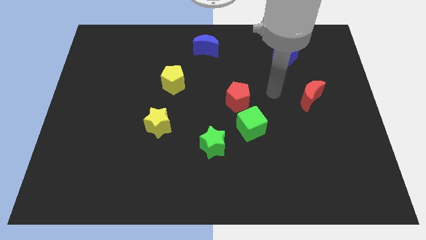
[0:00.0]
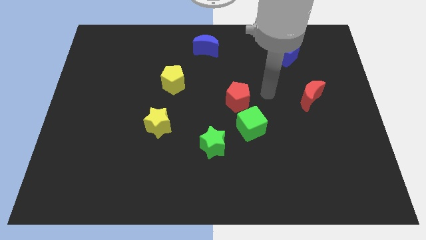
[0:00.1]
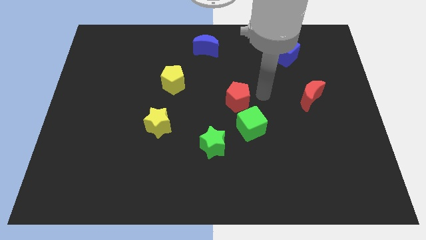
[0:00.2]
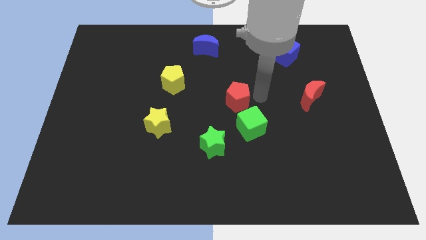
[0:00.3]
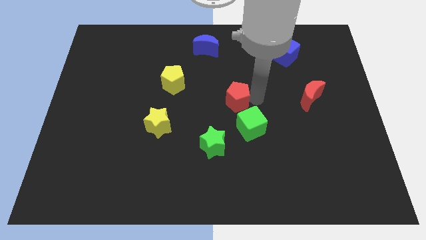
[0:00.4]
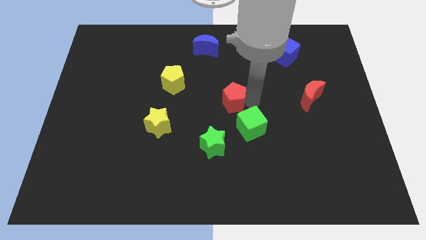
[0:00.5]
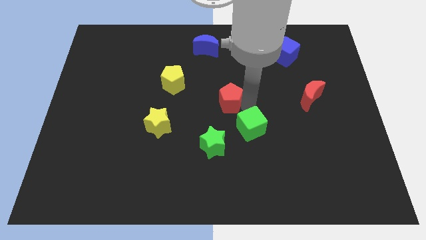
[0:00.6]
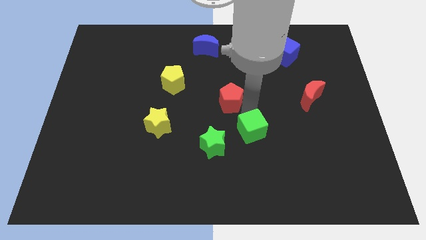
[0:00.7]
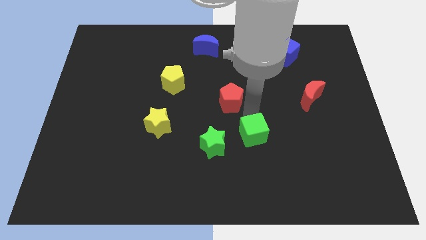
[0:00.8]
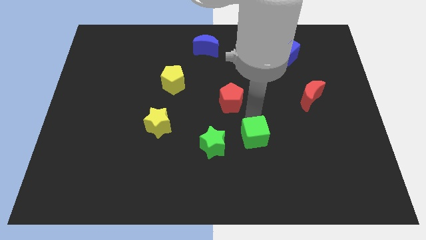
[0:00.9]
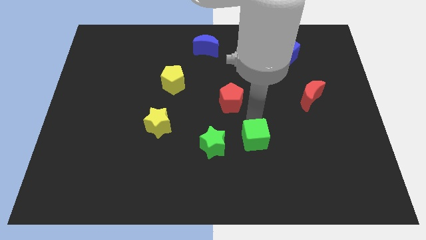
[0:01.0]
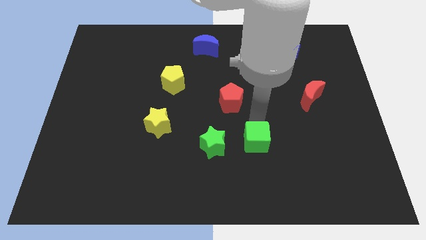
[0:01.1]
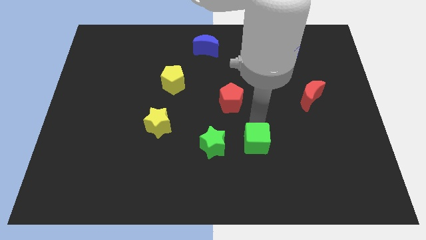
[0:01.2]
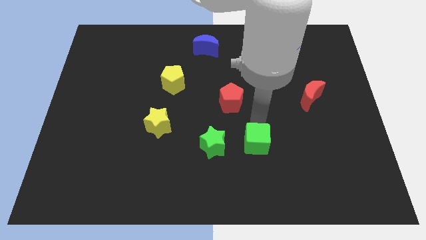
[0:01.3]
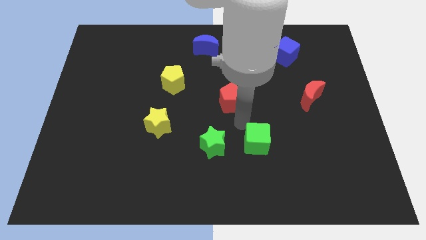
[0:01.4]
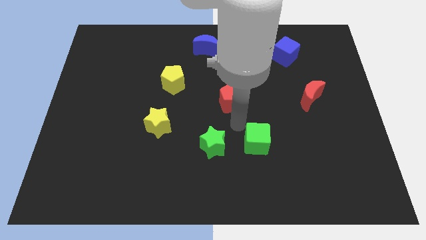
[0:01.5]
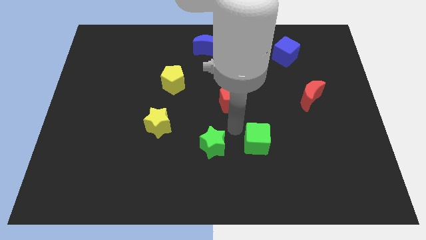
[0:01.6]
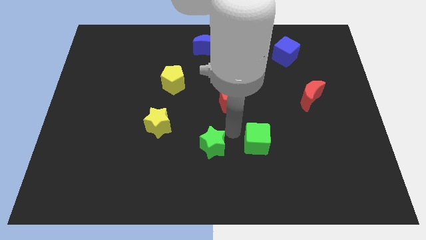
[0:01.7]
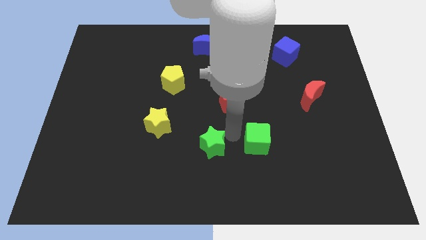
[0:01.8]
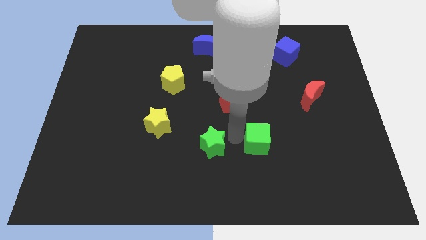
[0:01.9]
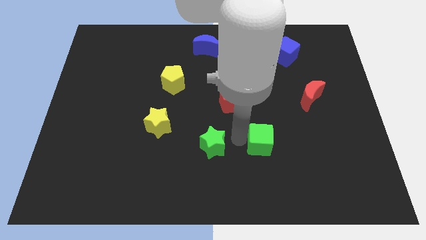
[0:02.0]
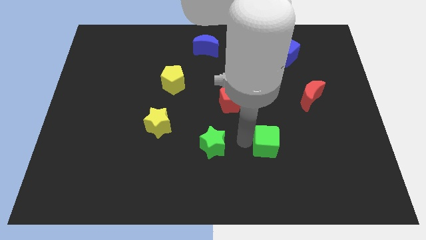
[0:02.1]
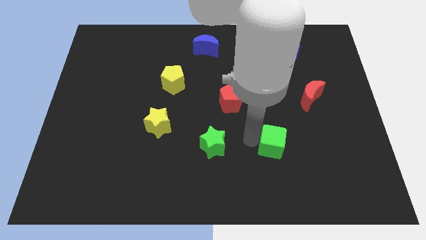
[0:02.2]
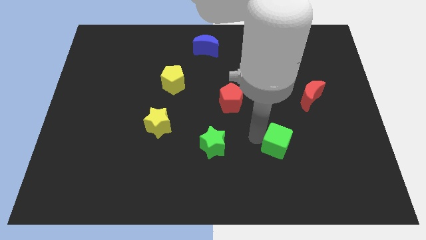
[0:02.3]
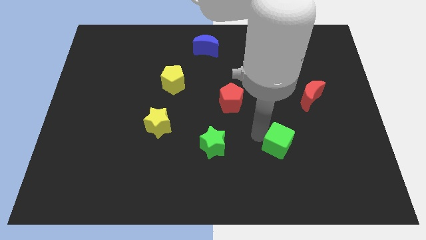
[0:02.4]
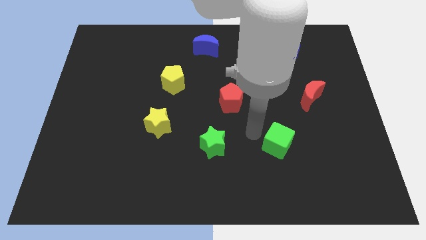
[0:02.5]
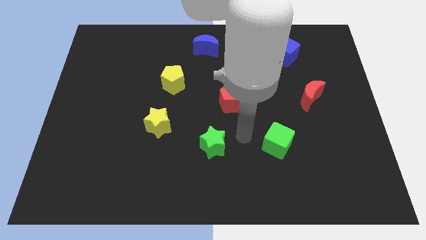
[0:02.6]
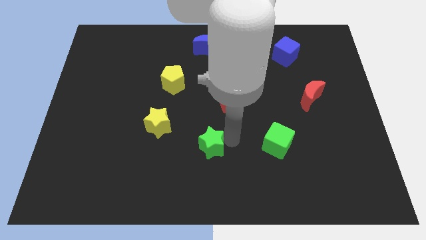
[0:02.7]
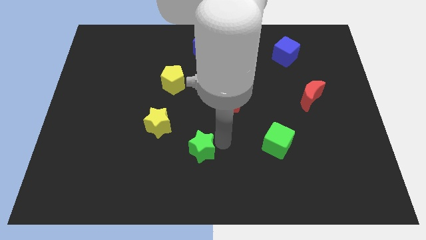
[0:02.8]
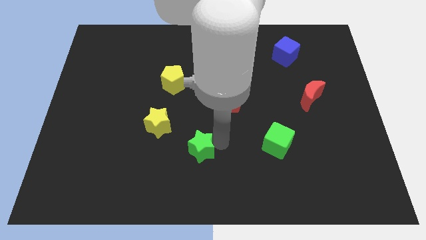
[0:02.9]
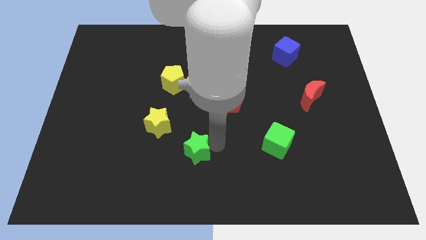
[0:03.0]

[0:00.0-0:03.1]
separate green cube from the green star

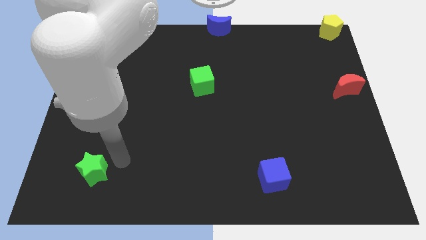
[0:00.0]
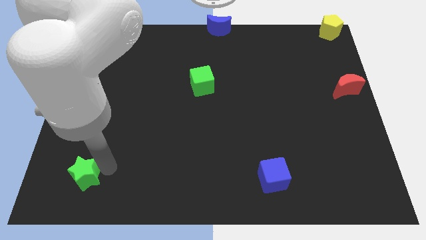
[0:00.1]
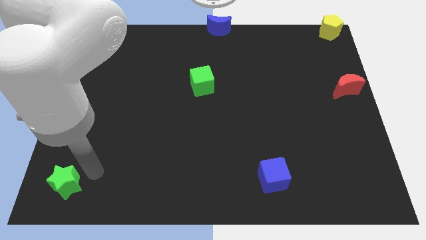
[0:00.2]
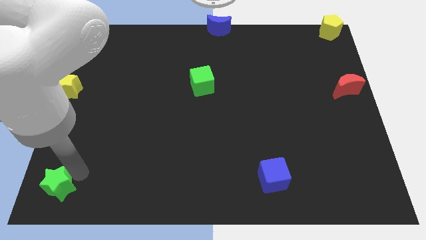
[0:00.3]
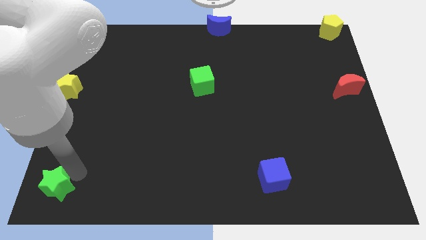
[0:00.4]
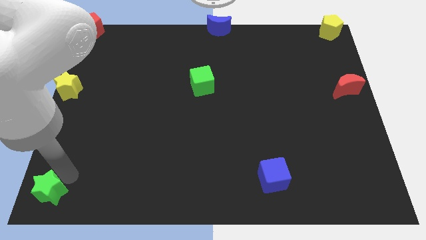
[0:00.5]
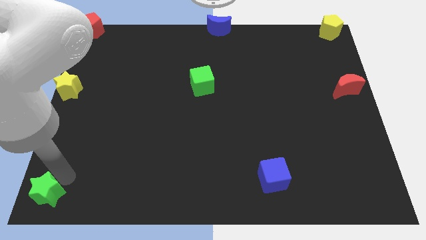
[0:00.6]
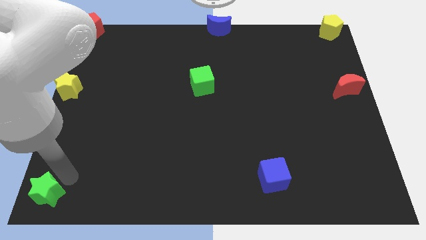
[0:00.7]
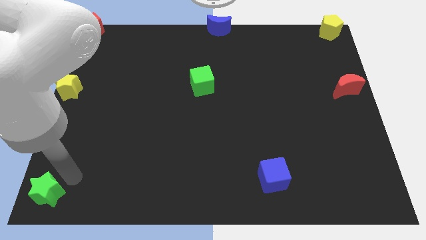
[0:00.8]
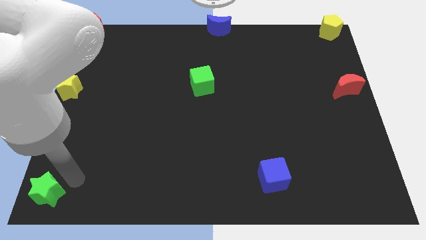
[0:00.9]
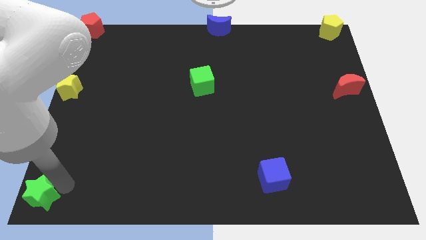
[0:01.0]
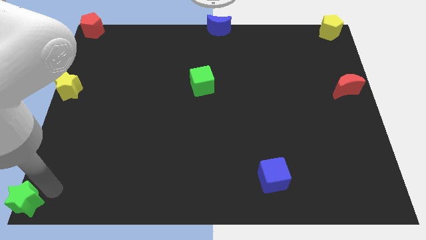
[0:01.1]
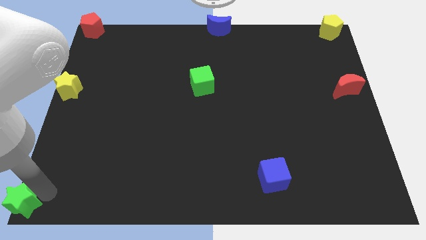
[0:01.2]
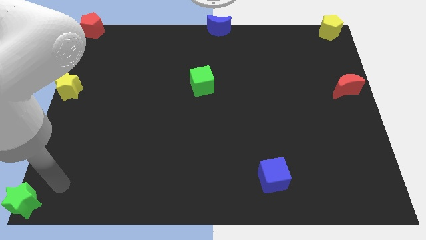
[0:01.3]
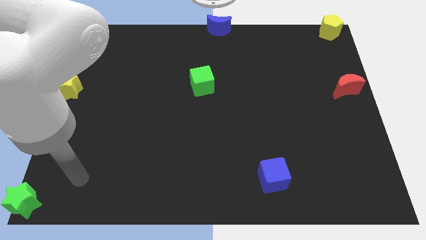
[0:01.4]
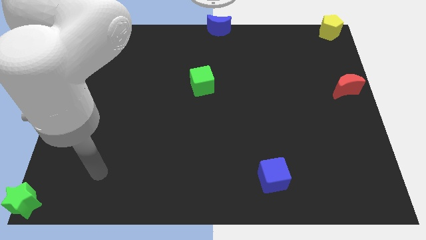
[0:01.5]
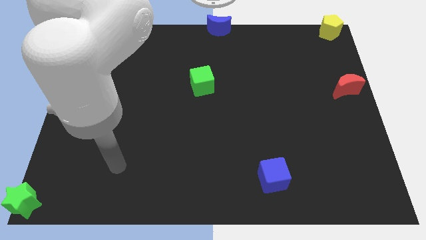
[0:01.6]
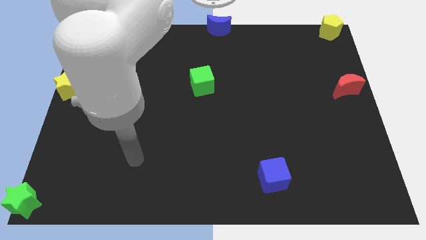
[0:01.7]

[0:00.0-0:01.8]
push the green star to the bottom of left corner of board

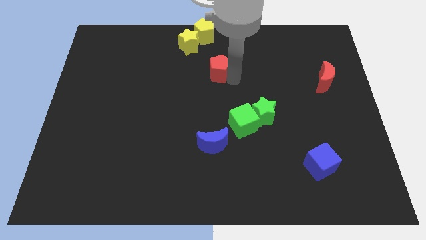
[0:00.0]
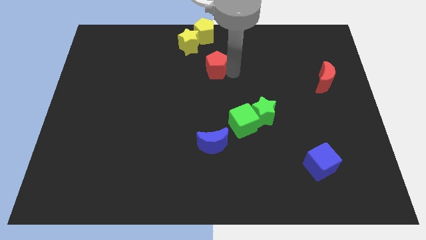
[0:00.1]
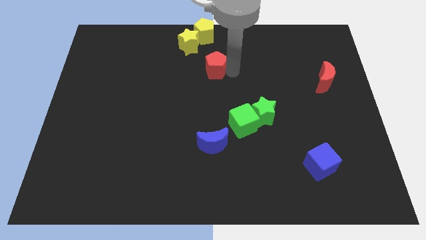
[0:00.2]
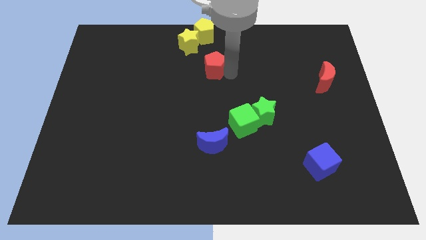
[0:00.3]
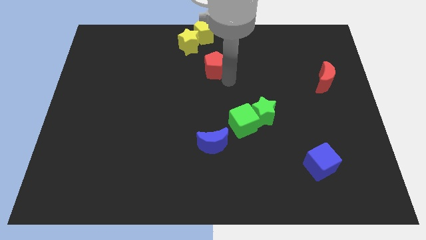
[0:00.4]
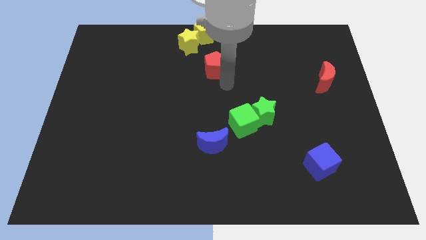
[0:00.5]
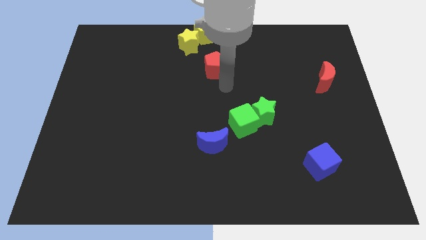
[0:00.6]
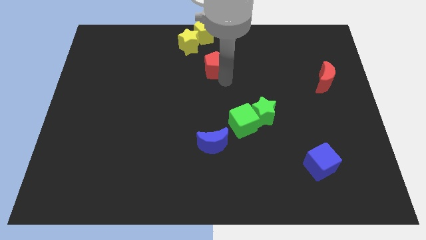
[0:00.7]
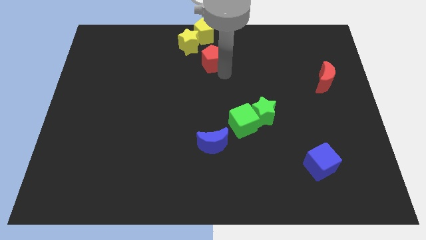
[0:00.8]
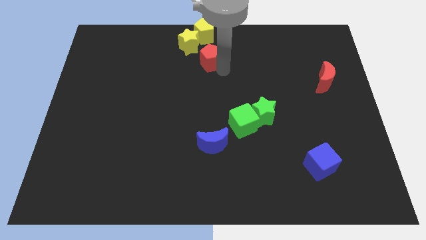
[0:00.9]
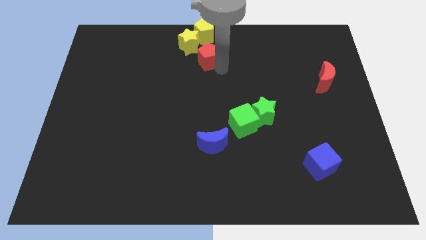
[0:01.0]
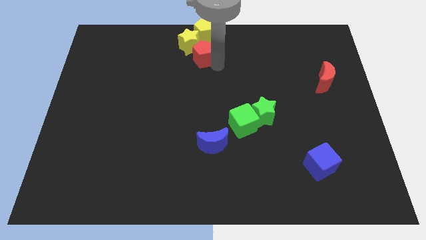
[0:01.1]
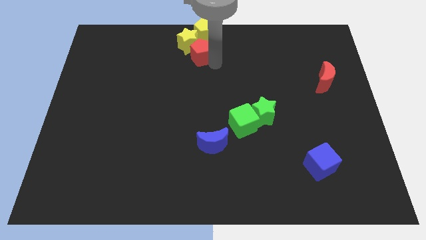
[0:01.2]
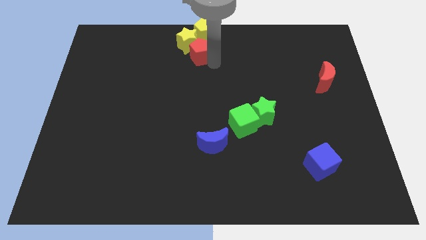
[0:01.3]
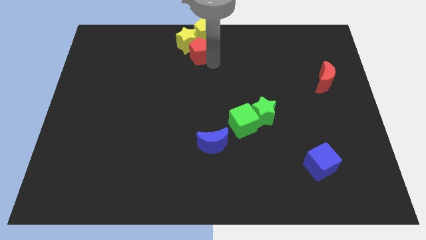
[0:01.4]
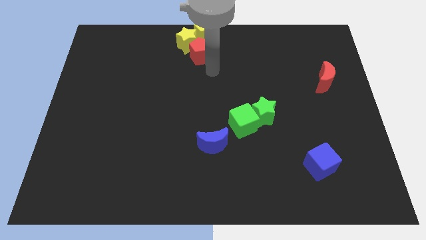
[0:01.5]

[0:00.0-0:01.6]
move the red pentagon into the yellow star

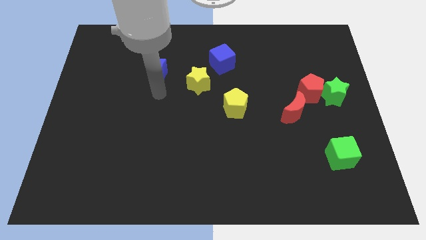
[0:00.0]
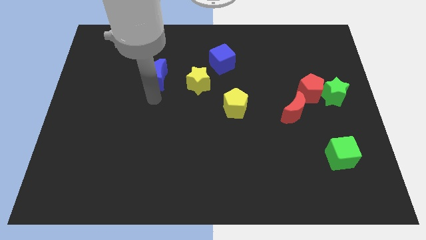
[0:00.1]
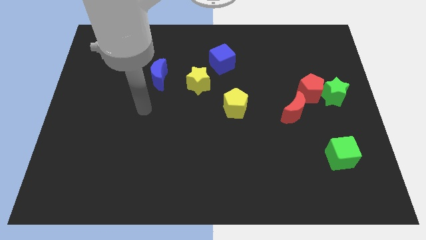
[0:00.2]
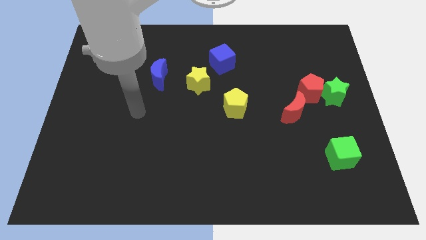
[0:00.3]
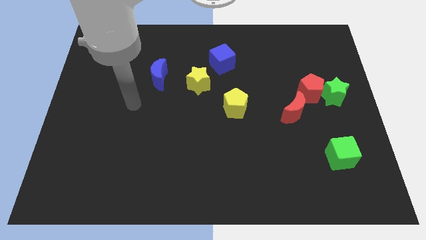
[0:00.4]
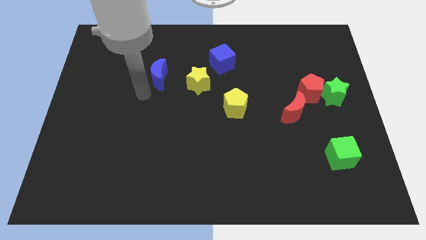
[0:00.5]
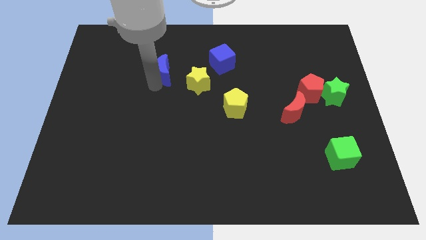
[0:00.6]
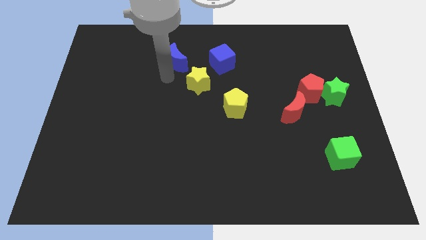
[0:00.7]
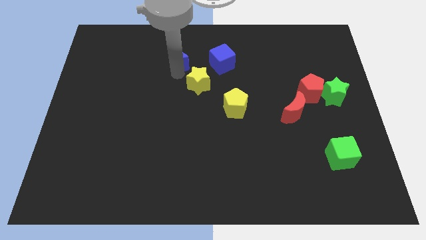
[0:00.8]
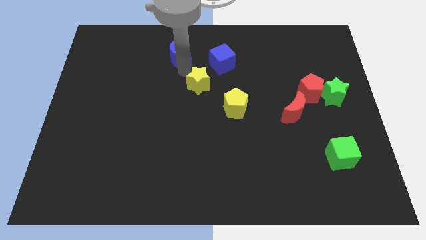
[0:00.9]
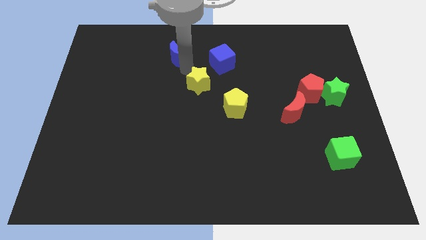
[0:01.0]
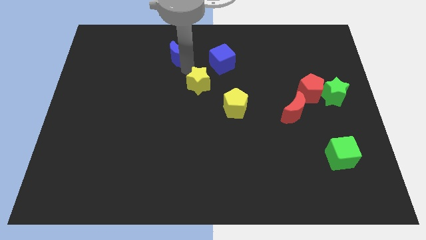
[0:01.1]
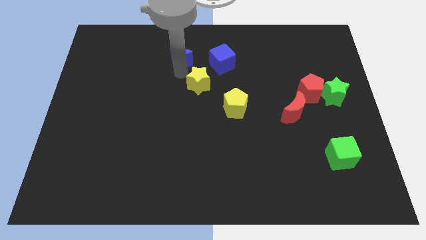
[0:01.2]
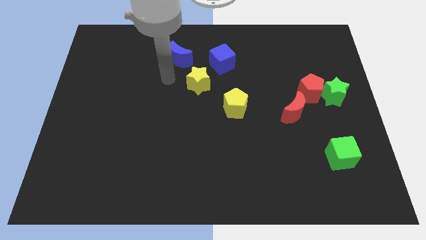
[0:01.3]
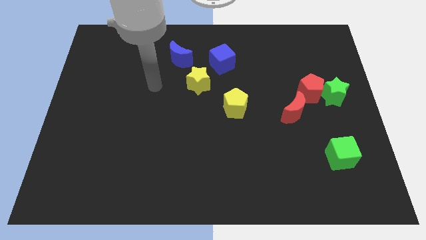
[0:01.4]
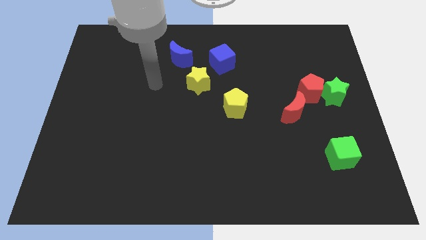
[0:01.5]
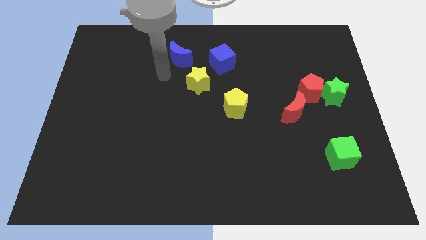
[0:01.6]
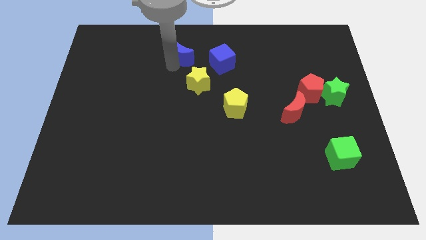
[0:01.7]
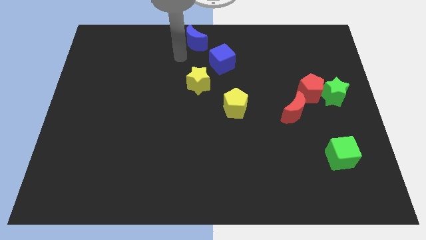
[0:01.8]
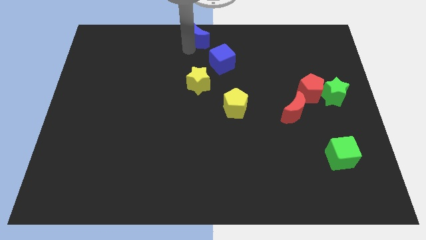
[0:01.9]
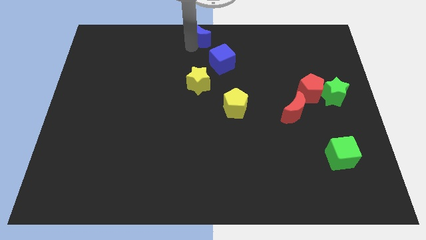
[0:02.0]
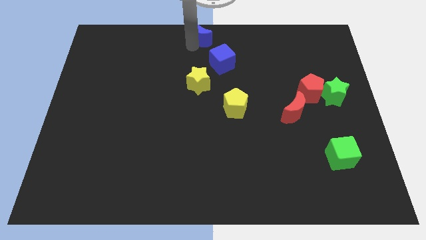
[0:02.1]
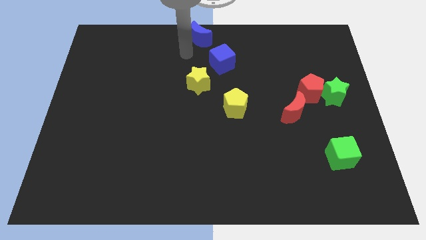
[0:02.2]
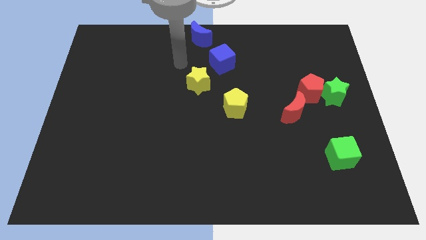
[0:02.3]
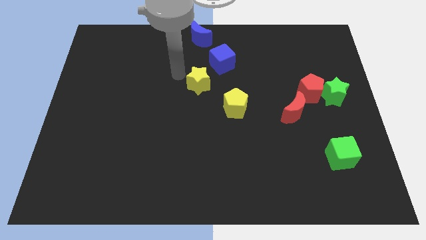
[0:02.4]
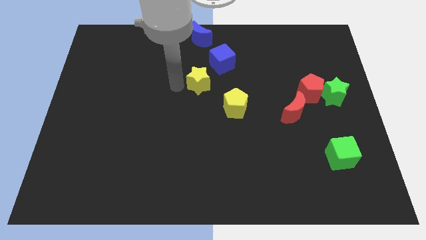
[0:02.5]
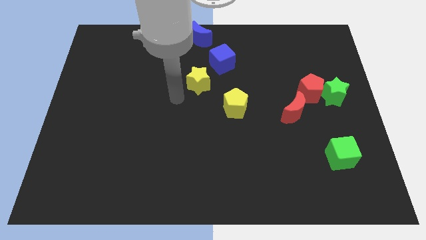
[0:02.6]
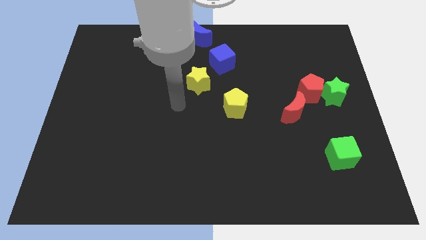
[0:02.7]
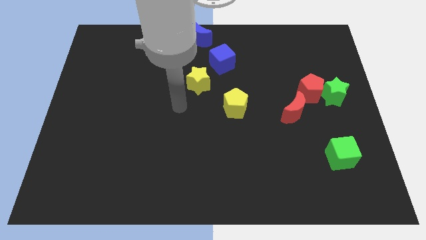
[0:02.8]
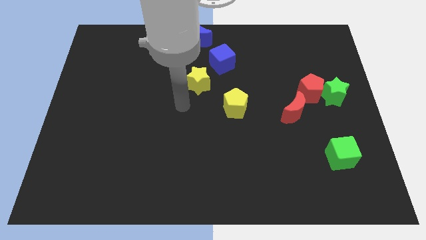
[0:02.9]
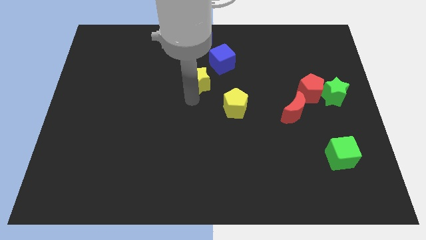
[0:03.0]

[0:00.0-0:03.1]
push the blue crescent to the top center of the board
